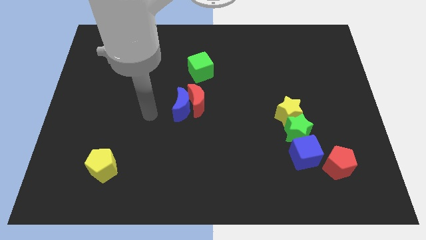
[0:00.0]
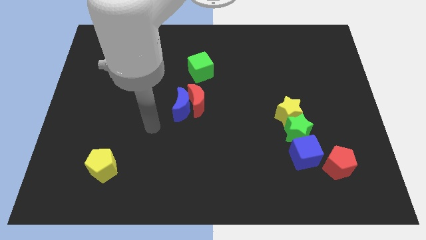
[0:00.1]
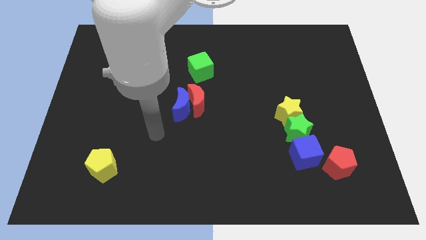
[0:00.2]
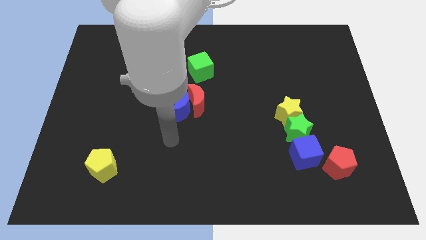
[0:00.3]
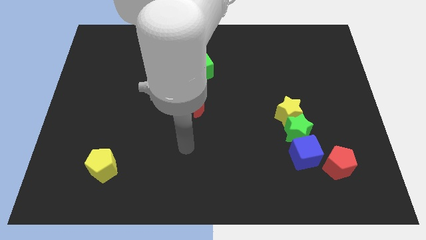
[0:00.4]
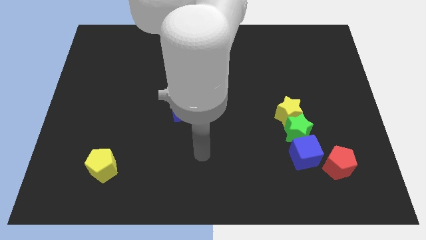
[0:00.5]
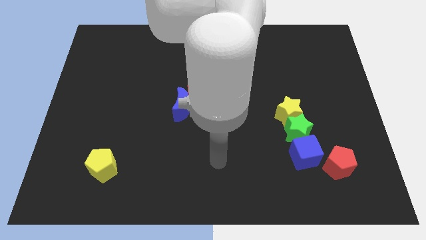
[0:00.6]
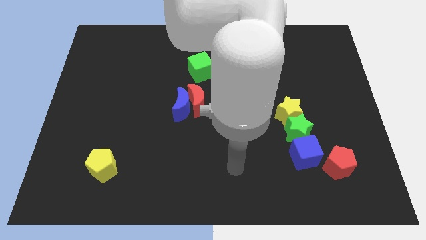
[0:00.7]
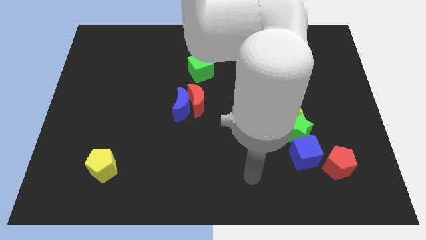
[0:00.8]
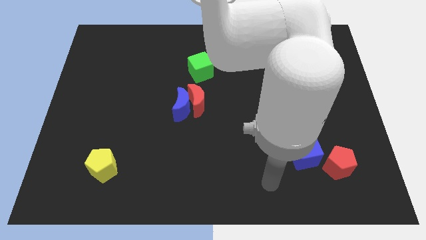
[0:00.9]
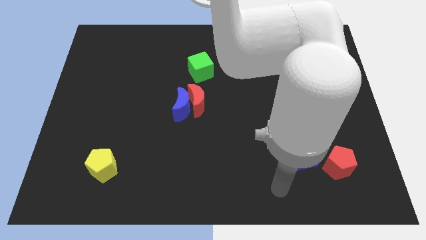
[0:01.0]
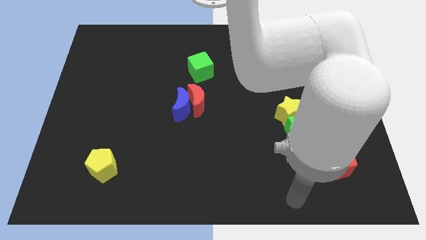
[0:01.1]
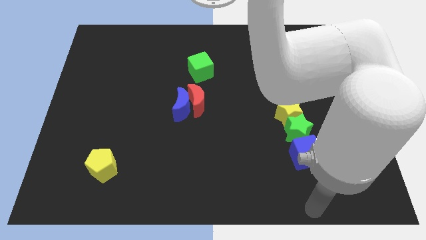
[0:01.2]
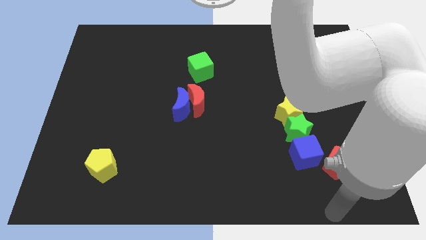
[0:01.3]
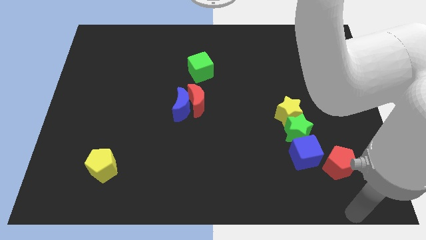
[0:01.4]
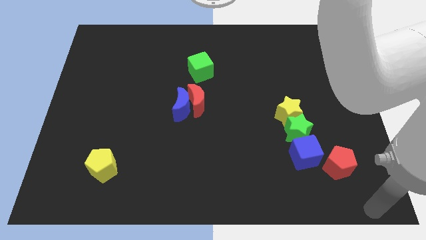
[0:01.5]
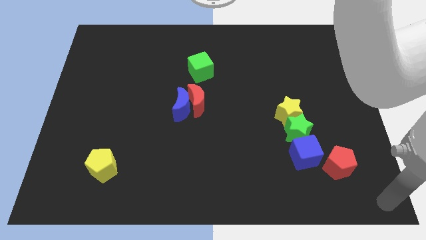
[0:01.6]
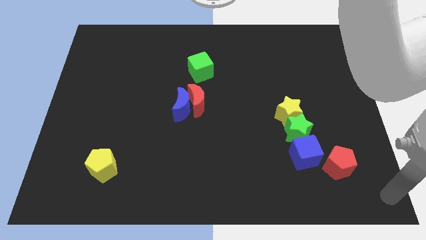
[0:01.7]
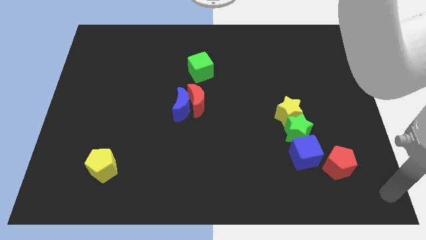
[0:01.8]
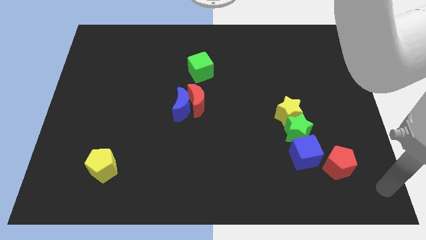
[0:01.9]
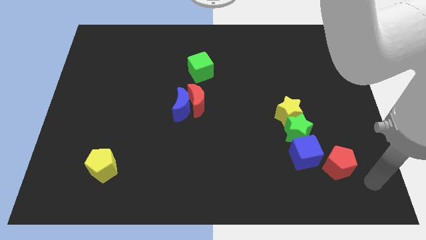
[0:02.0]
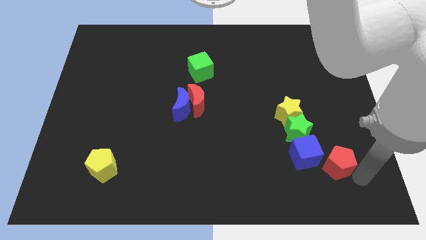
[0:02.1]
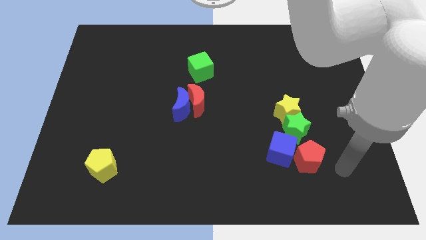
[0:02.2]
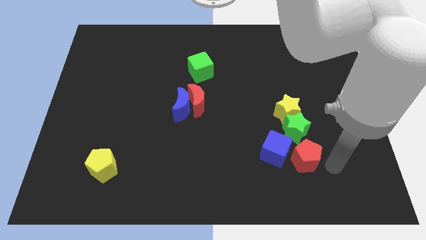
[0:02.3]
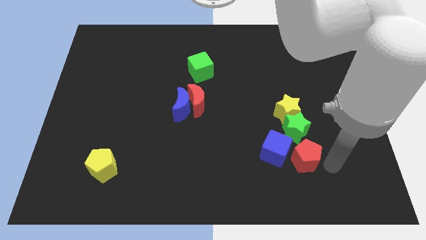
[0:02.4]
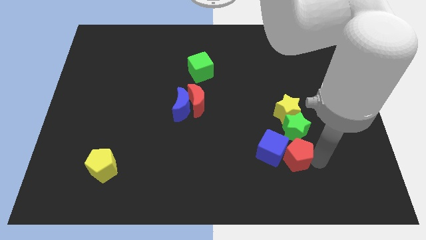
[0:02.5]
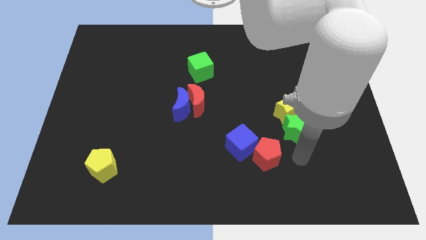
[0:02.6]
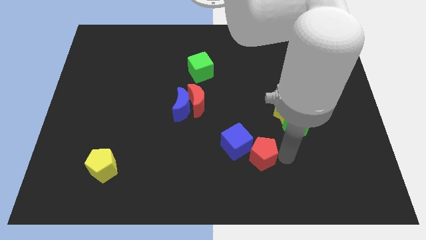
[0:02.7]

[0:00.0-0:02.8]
push the red pentagon into the blue cube

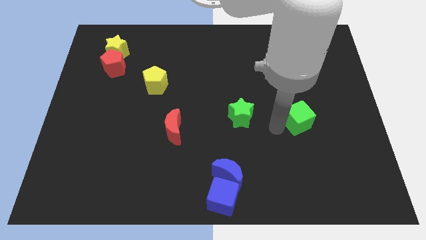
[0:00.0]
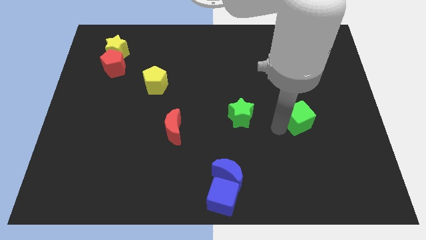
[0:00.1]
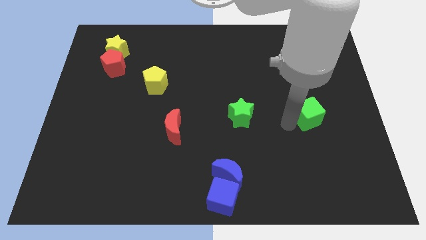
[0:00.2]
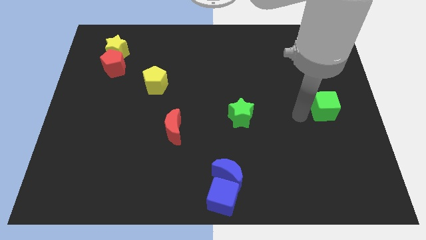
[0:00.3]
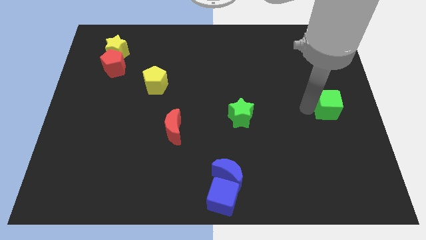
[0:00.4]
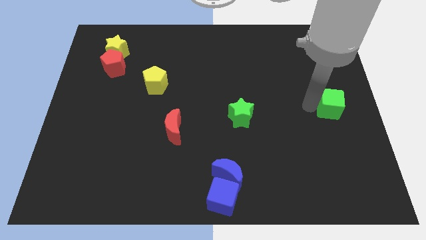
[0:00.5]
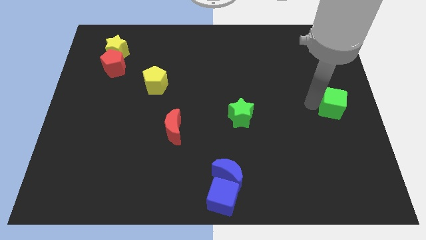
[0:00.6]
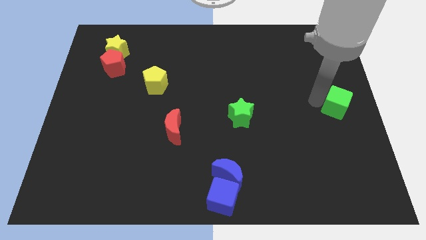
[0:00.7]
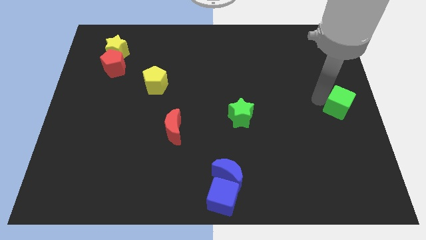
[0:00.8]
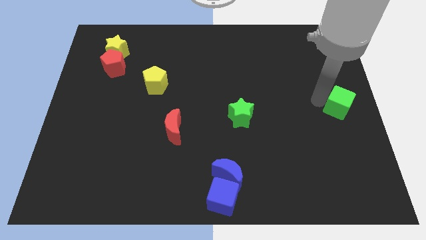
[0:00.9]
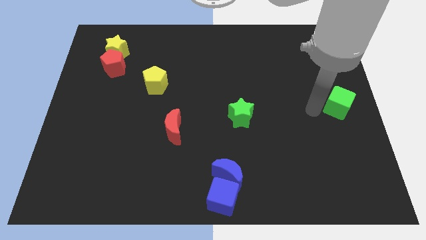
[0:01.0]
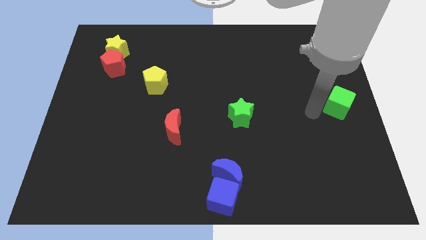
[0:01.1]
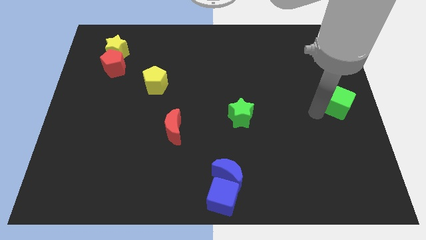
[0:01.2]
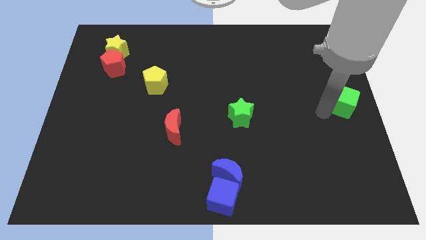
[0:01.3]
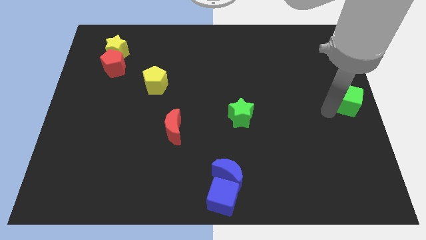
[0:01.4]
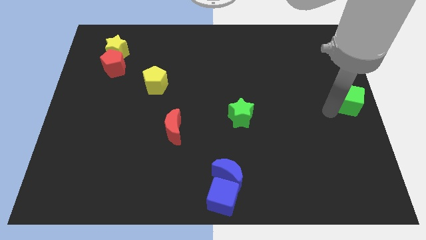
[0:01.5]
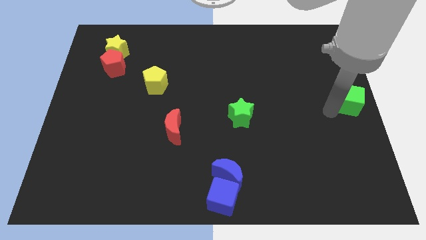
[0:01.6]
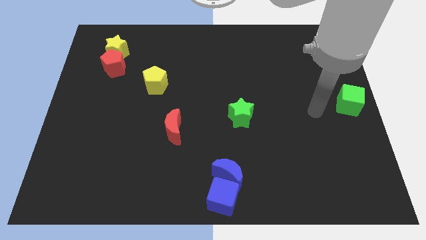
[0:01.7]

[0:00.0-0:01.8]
place the green cube to the right center of the board

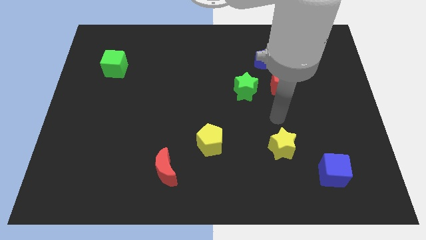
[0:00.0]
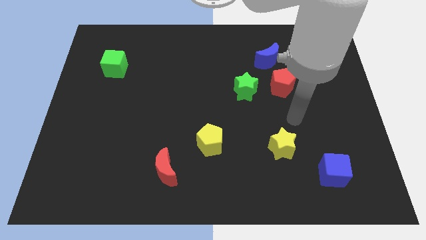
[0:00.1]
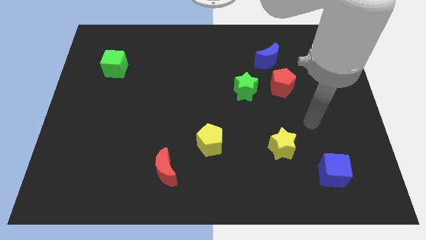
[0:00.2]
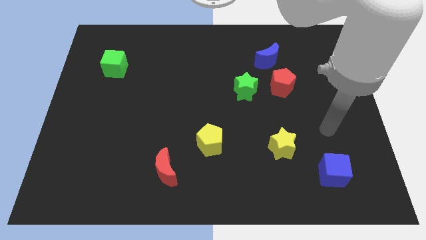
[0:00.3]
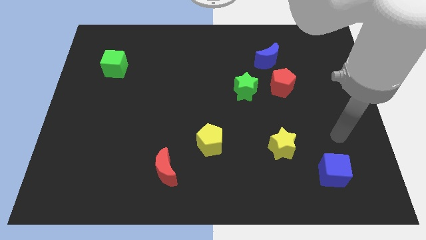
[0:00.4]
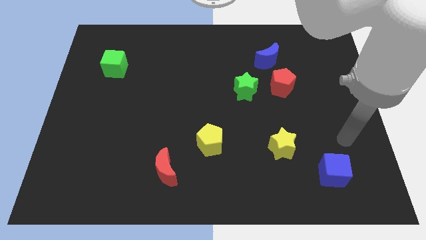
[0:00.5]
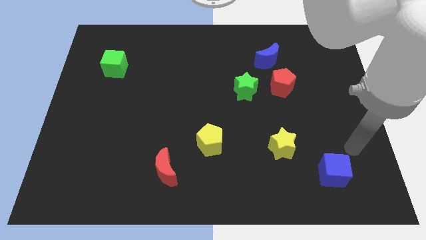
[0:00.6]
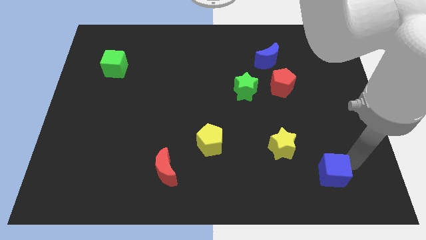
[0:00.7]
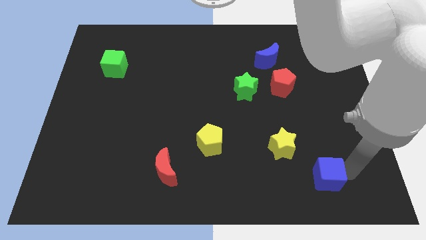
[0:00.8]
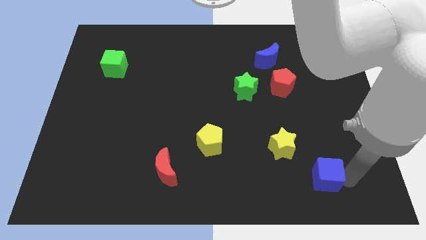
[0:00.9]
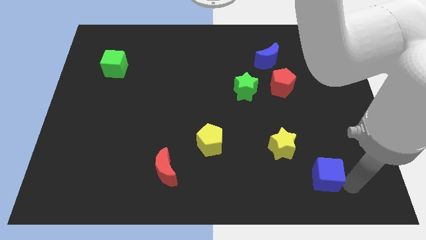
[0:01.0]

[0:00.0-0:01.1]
place the arm at the right side of the blue cube

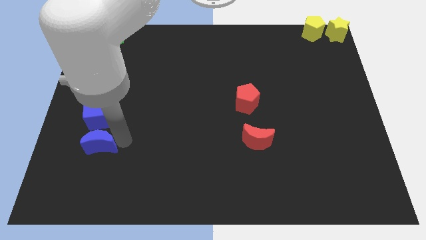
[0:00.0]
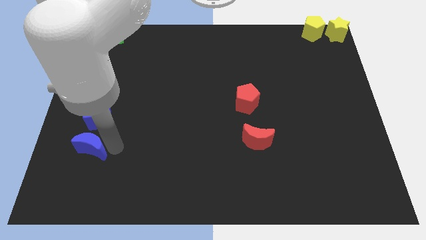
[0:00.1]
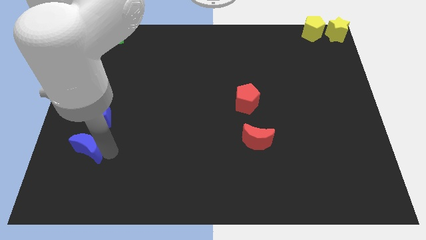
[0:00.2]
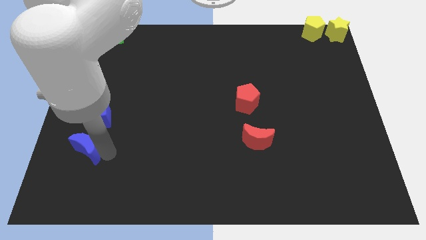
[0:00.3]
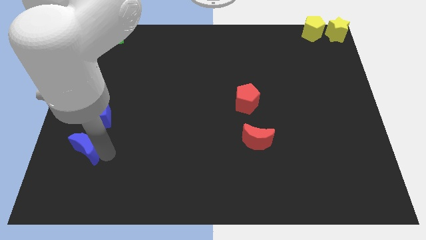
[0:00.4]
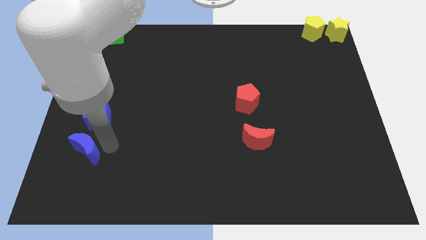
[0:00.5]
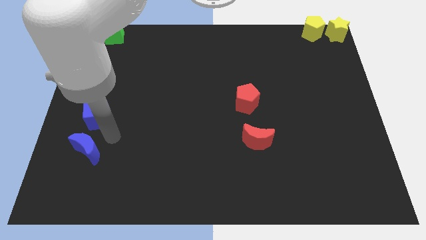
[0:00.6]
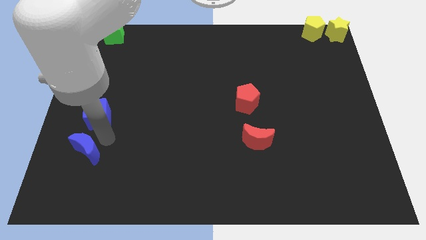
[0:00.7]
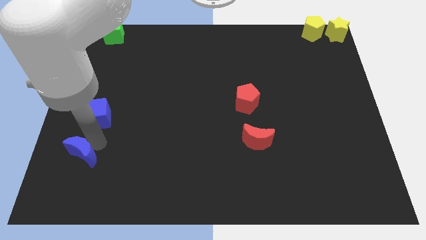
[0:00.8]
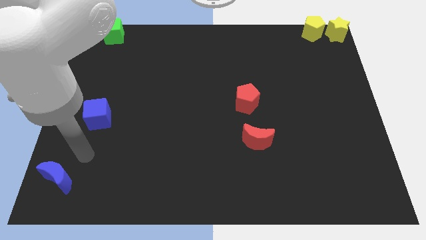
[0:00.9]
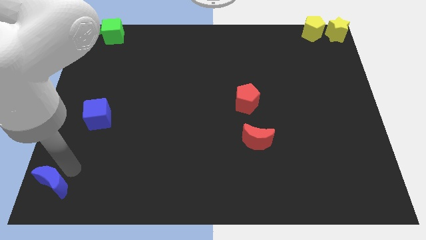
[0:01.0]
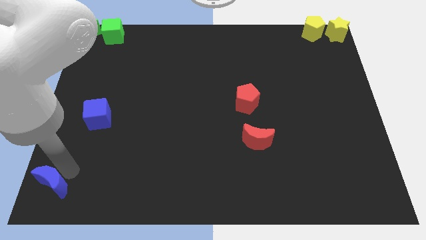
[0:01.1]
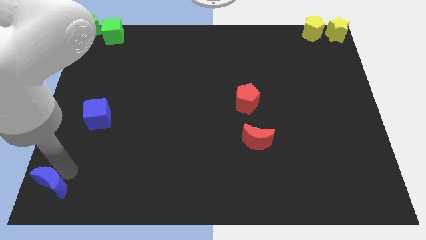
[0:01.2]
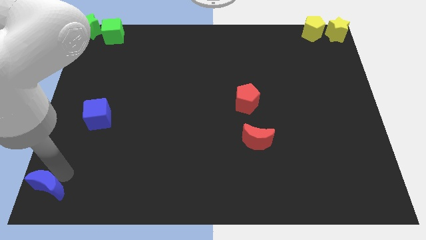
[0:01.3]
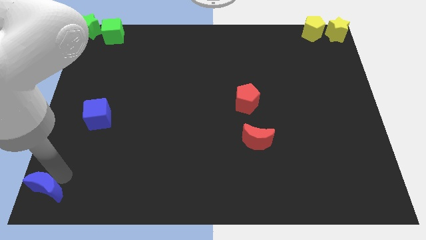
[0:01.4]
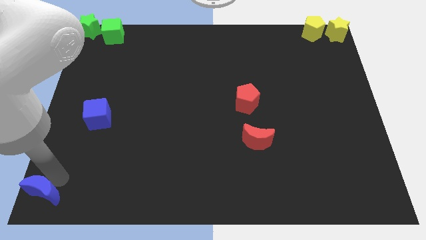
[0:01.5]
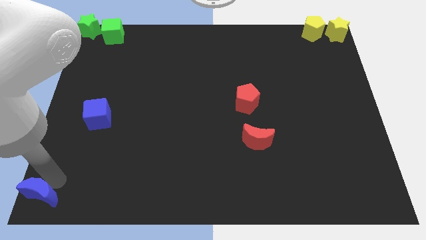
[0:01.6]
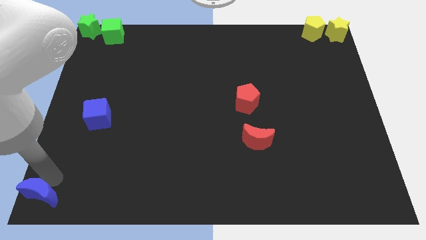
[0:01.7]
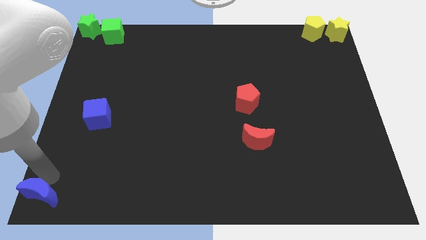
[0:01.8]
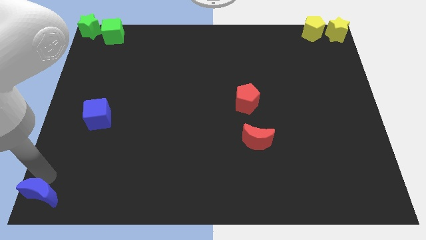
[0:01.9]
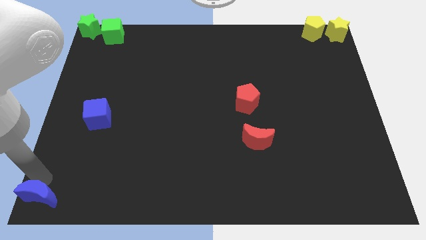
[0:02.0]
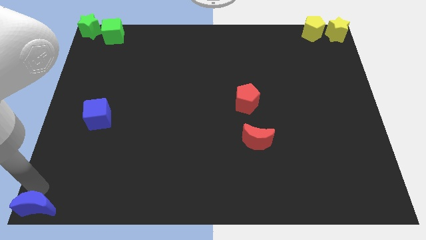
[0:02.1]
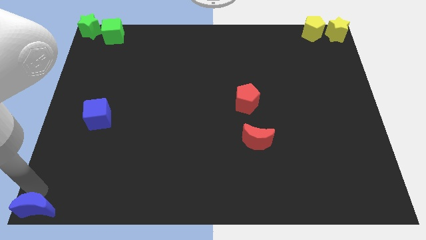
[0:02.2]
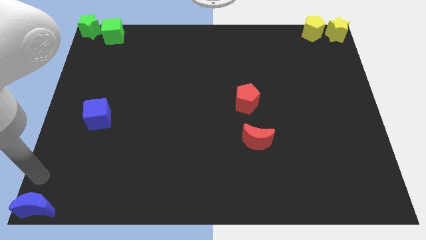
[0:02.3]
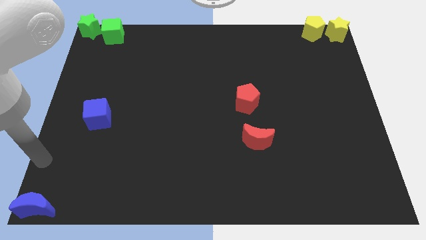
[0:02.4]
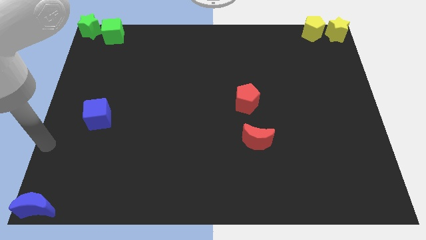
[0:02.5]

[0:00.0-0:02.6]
separate blue moon away from blue cube

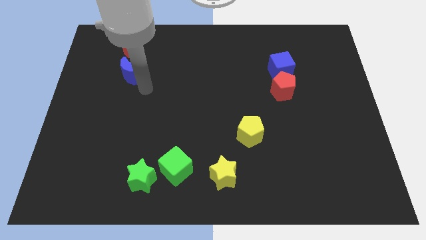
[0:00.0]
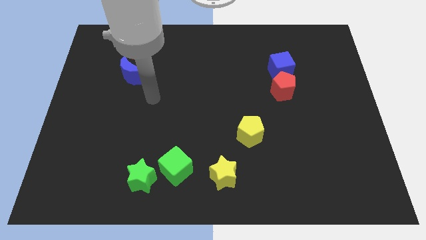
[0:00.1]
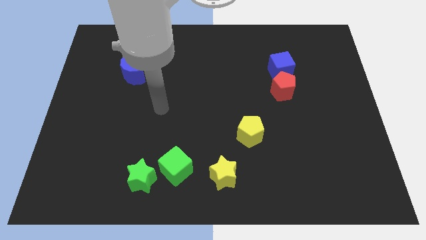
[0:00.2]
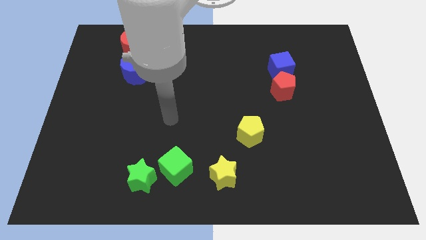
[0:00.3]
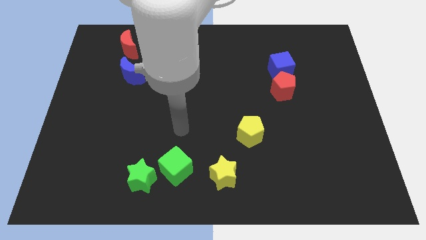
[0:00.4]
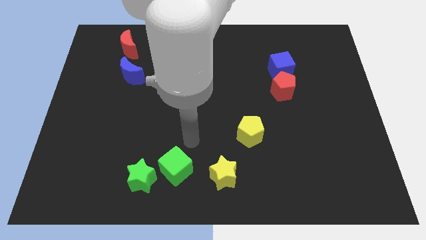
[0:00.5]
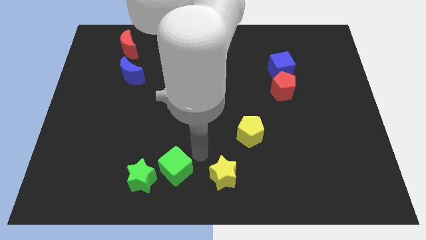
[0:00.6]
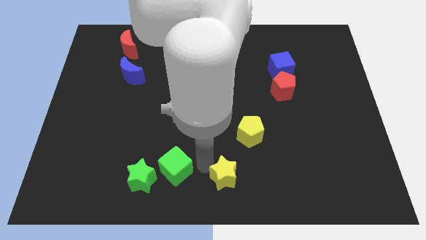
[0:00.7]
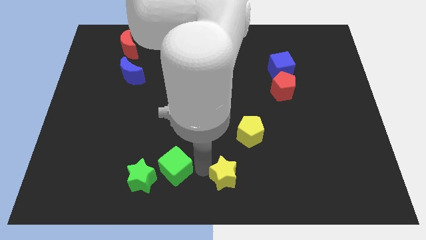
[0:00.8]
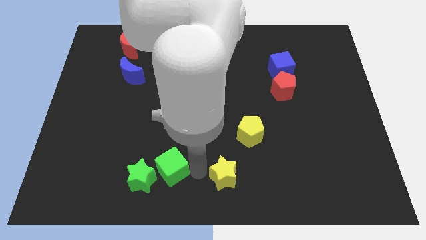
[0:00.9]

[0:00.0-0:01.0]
go and put your hand in between the green cube and yellow star
